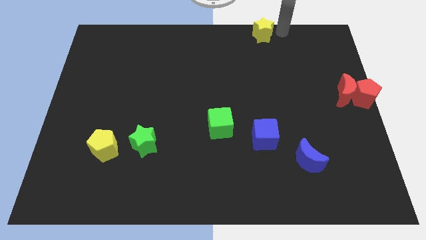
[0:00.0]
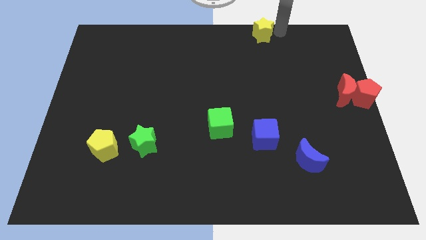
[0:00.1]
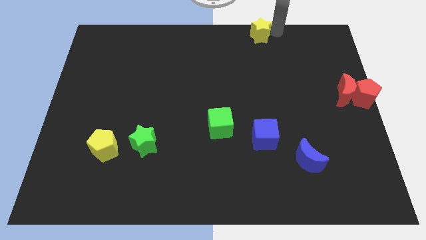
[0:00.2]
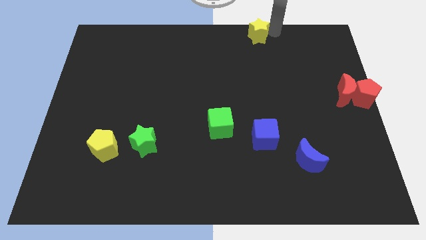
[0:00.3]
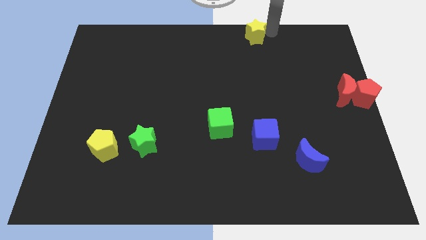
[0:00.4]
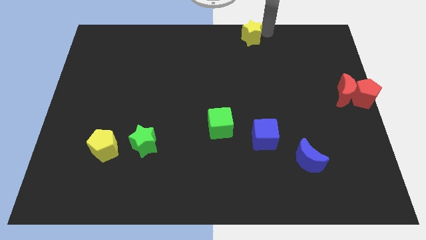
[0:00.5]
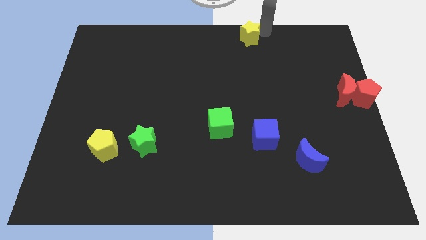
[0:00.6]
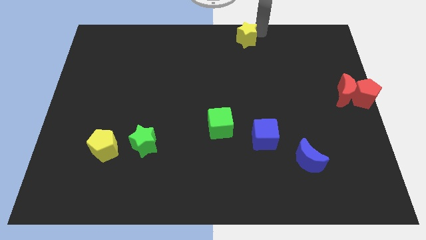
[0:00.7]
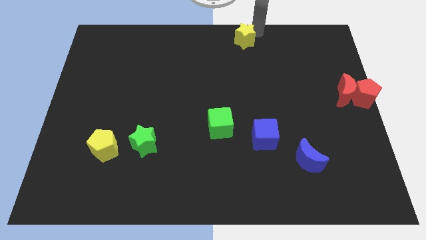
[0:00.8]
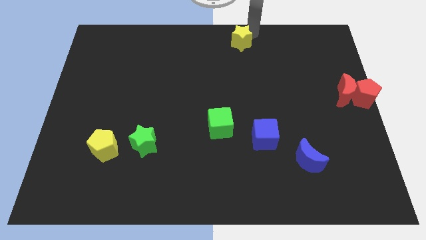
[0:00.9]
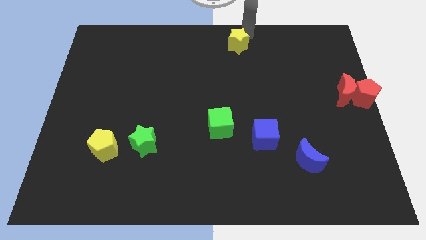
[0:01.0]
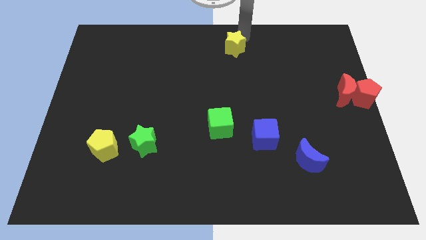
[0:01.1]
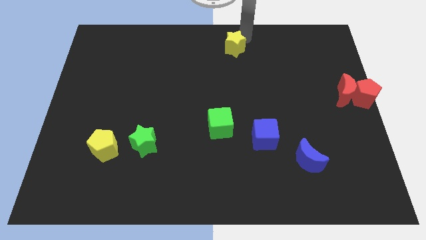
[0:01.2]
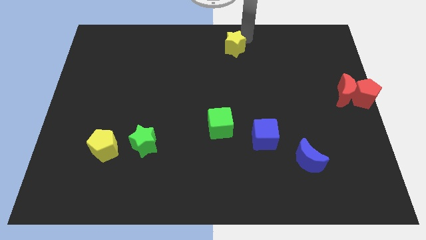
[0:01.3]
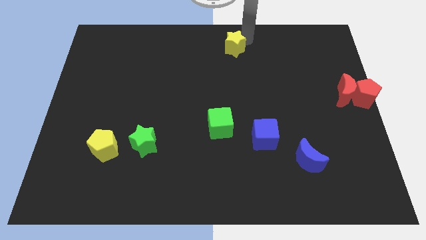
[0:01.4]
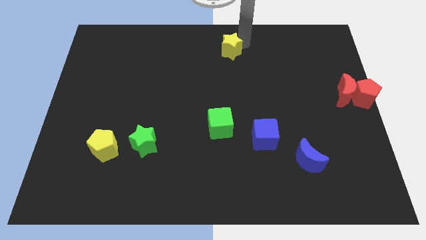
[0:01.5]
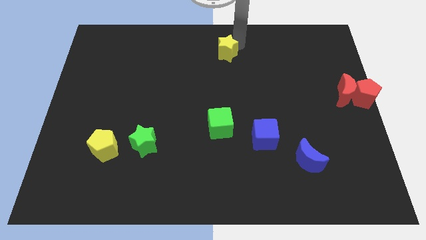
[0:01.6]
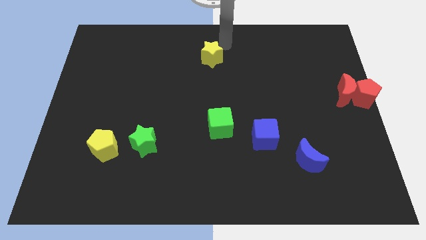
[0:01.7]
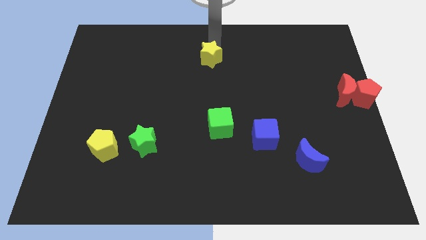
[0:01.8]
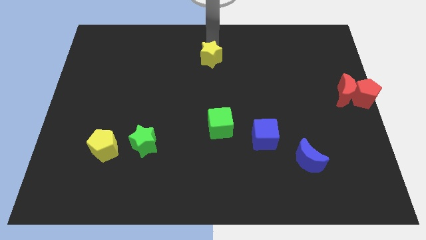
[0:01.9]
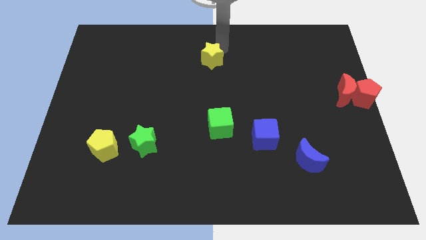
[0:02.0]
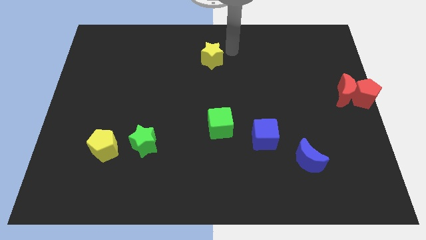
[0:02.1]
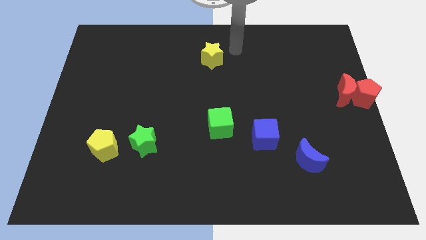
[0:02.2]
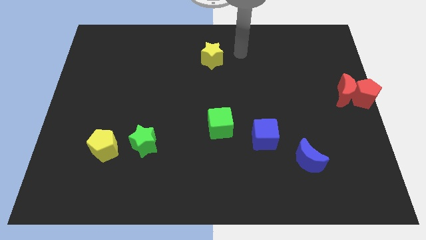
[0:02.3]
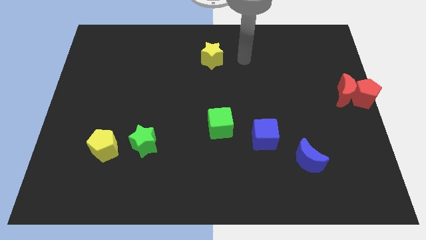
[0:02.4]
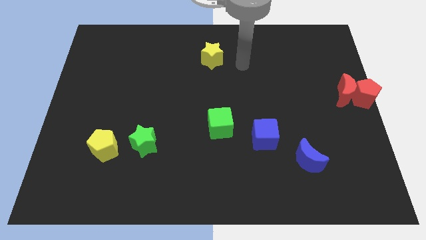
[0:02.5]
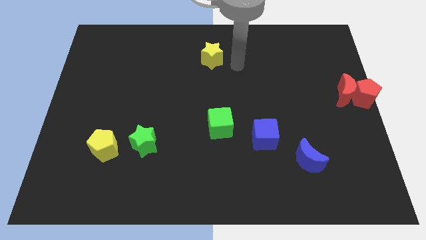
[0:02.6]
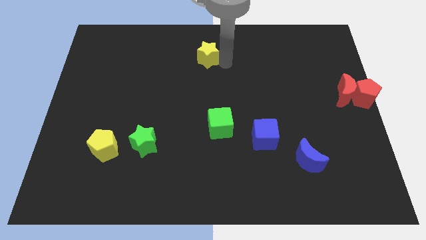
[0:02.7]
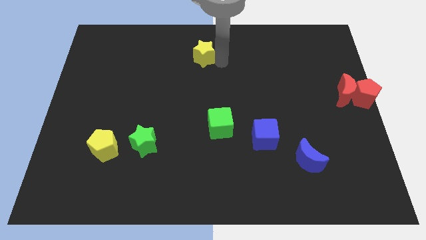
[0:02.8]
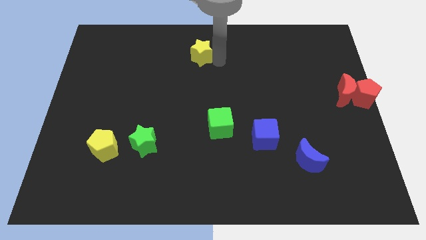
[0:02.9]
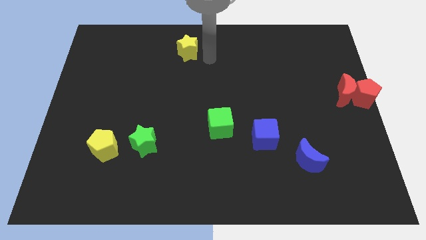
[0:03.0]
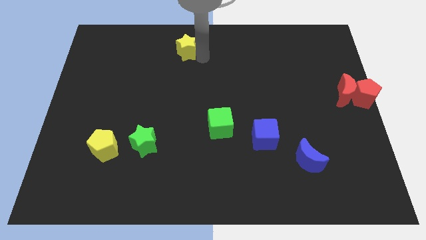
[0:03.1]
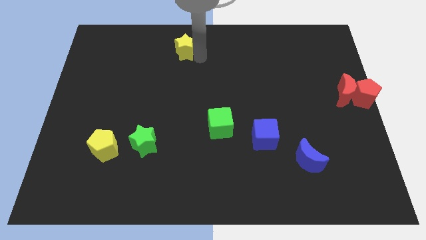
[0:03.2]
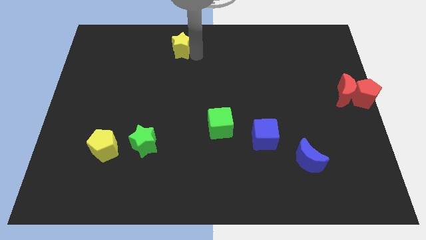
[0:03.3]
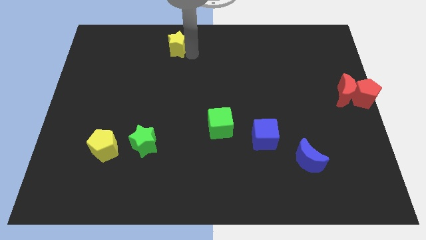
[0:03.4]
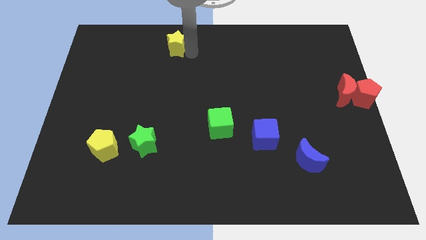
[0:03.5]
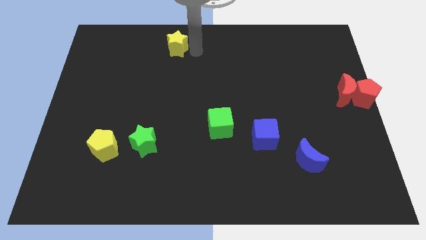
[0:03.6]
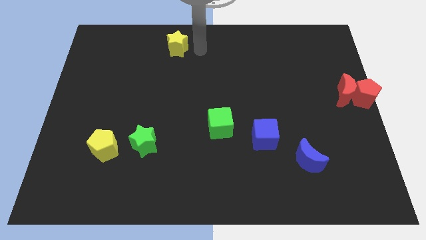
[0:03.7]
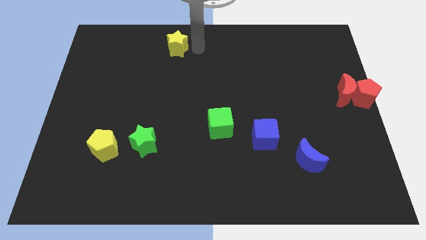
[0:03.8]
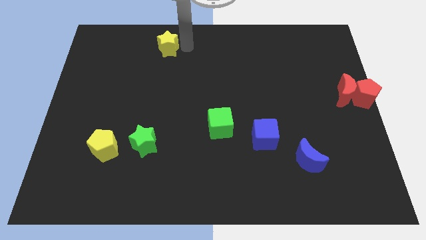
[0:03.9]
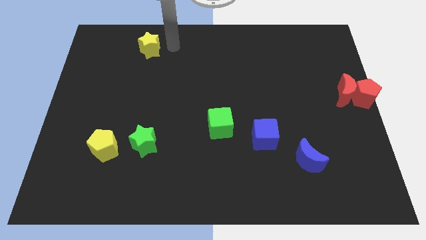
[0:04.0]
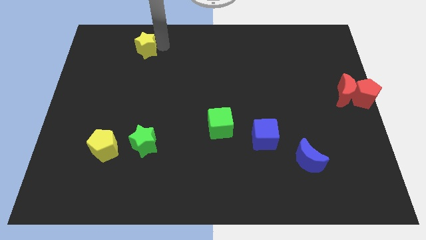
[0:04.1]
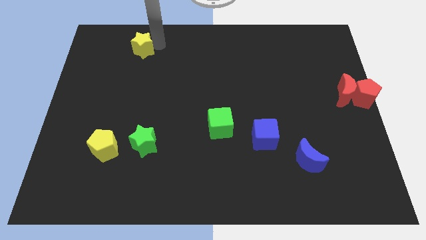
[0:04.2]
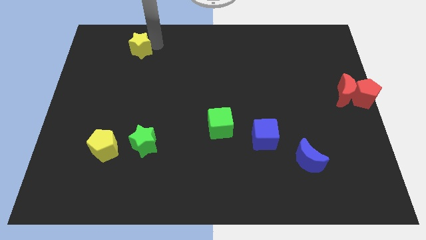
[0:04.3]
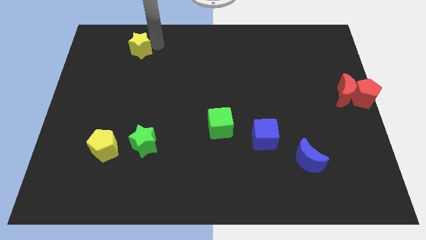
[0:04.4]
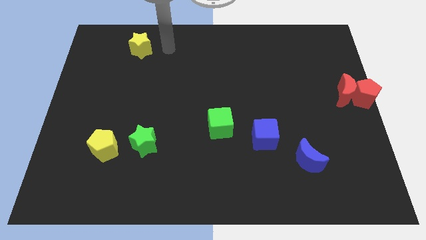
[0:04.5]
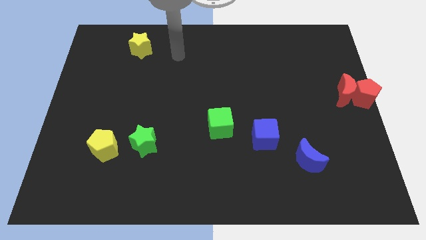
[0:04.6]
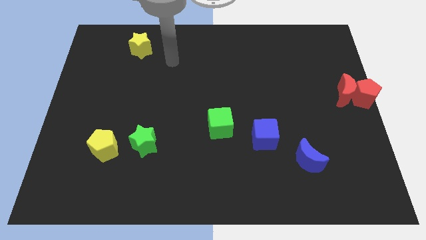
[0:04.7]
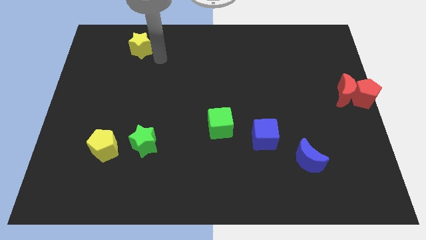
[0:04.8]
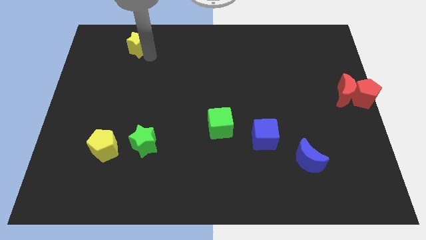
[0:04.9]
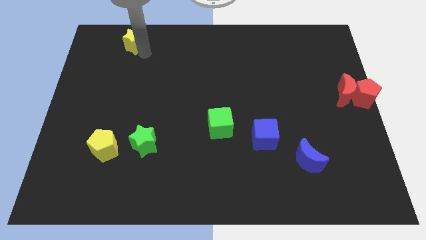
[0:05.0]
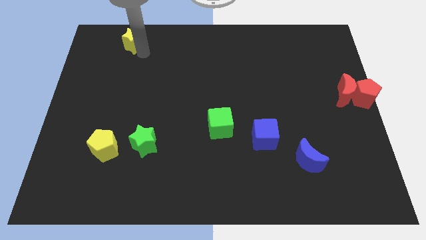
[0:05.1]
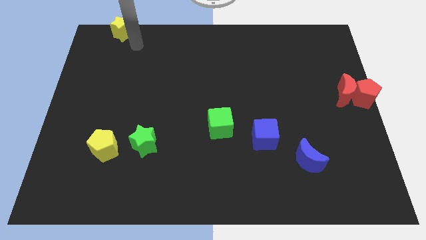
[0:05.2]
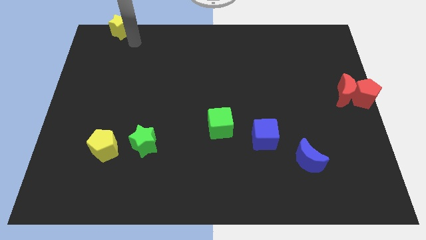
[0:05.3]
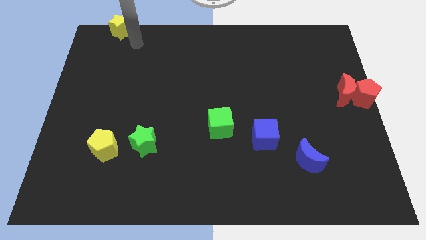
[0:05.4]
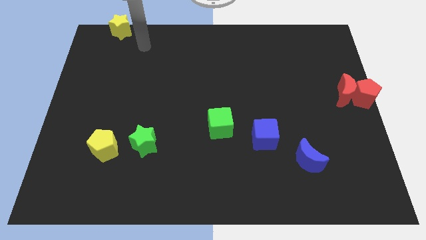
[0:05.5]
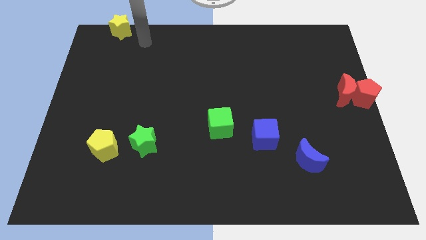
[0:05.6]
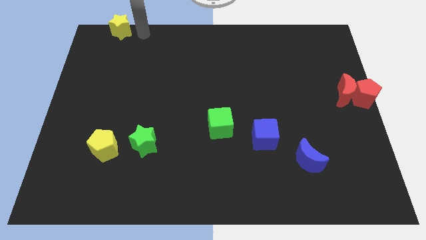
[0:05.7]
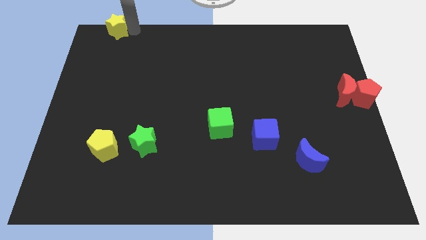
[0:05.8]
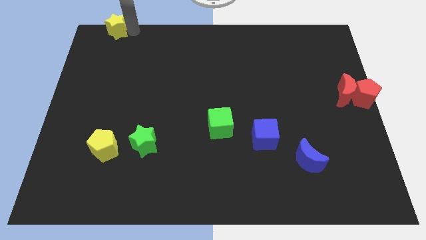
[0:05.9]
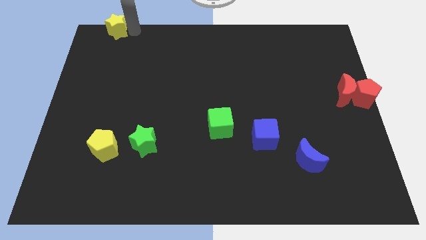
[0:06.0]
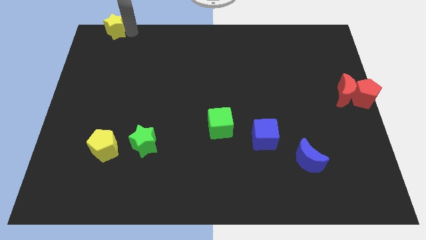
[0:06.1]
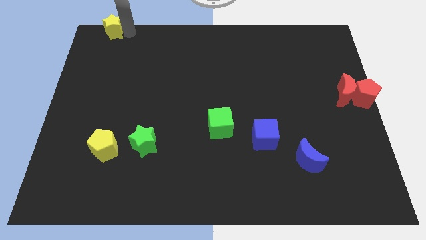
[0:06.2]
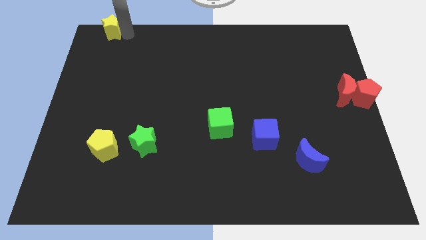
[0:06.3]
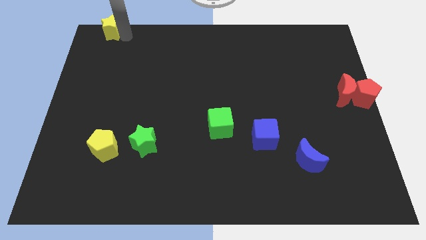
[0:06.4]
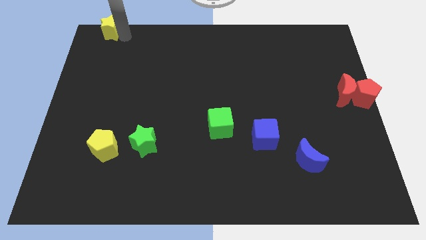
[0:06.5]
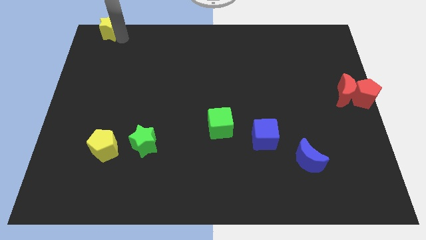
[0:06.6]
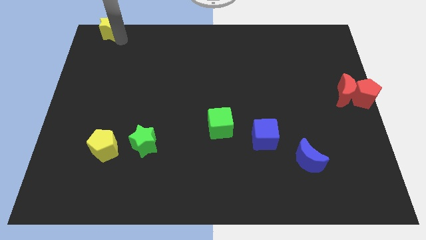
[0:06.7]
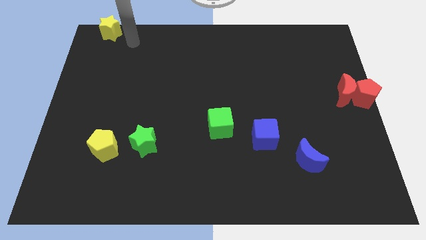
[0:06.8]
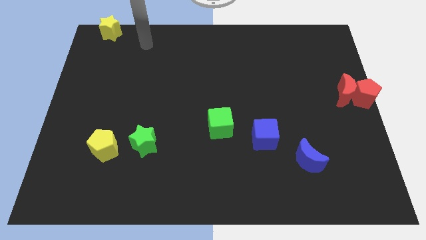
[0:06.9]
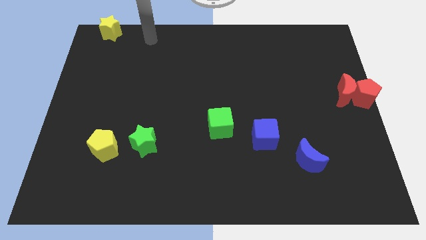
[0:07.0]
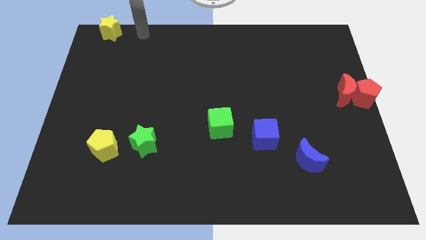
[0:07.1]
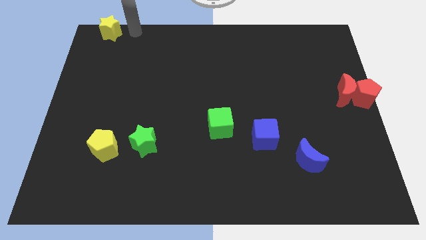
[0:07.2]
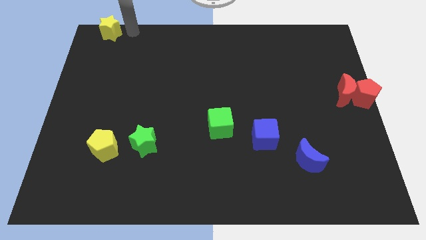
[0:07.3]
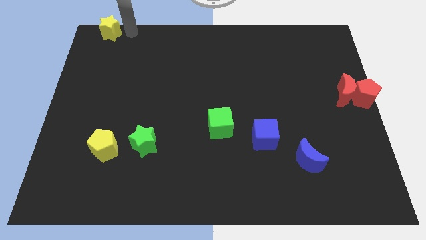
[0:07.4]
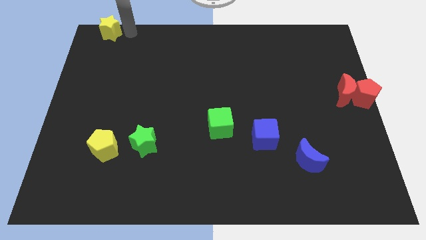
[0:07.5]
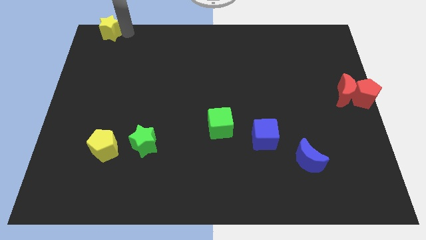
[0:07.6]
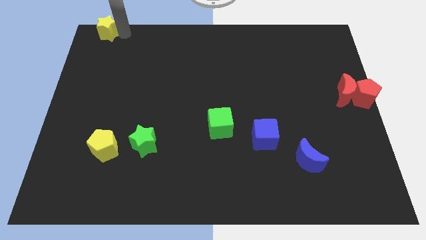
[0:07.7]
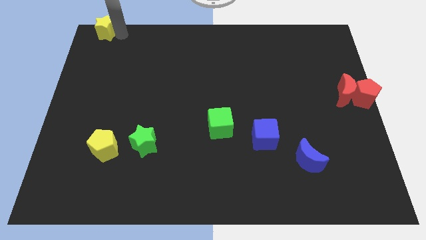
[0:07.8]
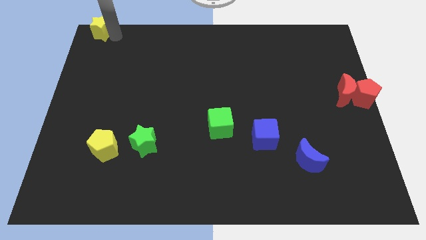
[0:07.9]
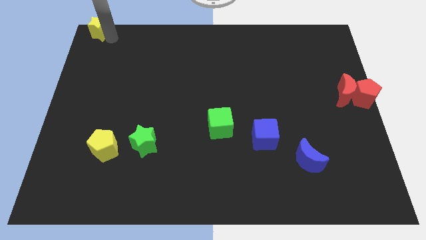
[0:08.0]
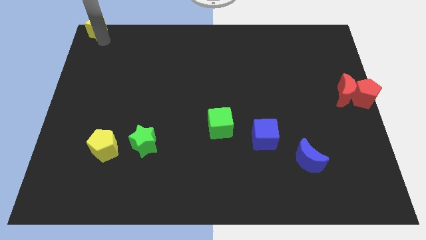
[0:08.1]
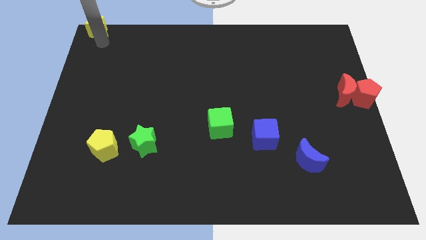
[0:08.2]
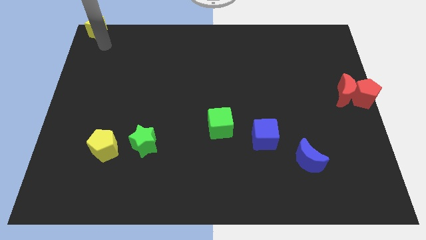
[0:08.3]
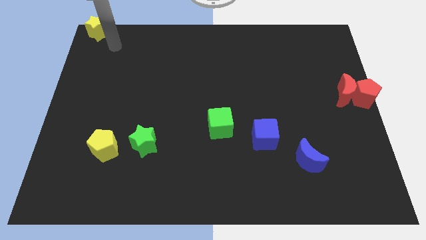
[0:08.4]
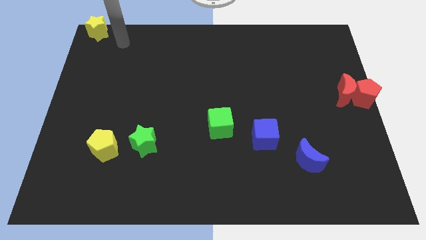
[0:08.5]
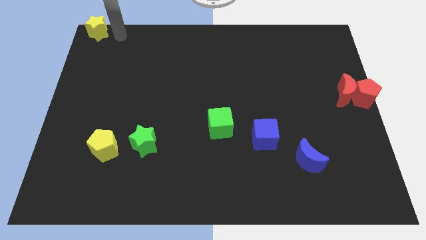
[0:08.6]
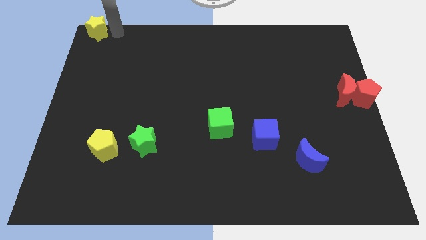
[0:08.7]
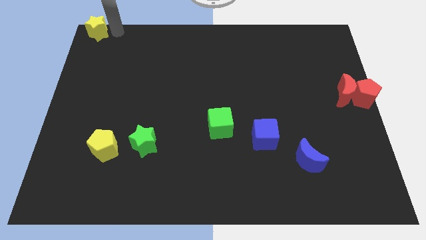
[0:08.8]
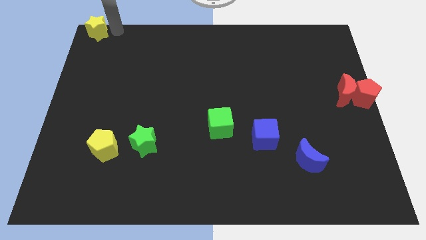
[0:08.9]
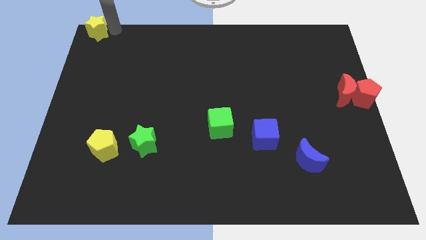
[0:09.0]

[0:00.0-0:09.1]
place yellow star at the top left
